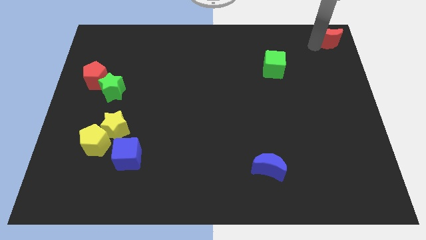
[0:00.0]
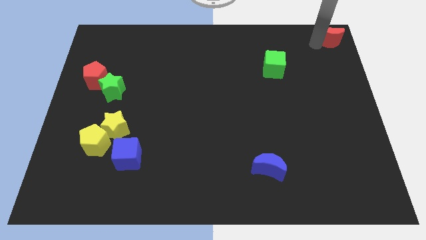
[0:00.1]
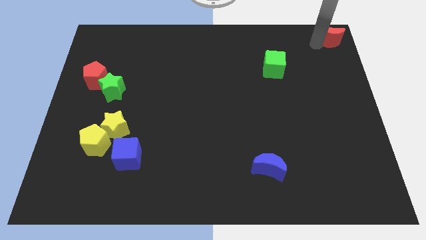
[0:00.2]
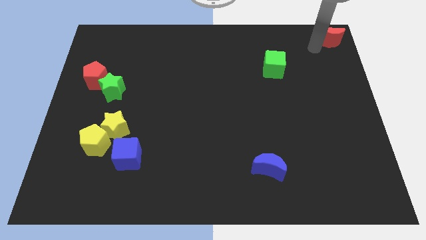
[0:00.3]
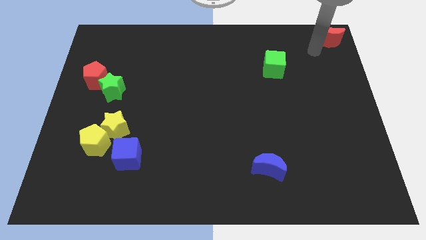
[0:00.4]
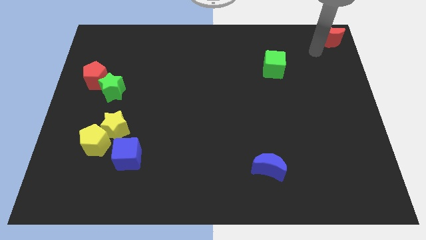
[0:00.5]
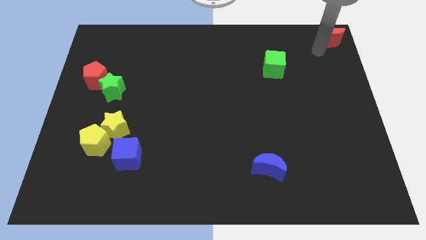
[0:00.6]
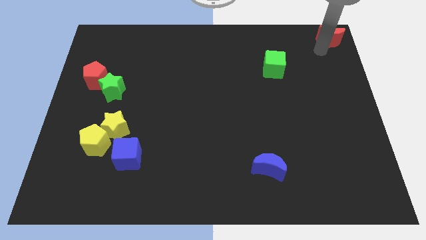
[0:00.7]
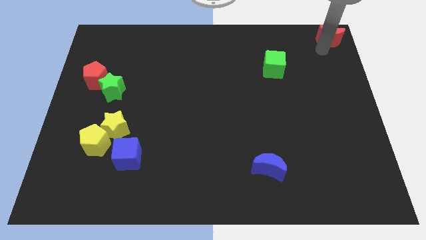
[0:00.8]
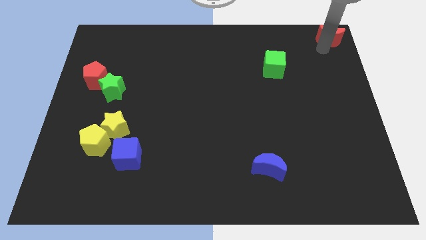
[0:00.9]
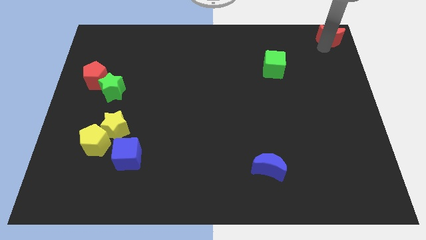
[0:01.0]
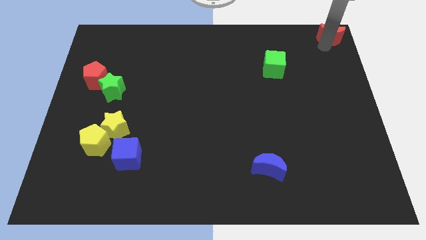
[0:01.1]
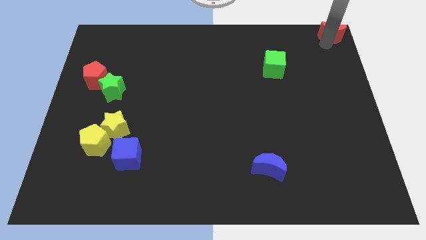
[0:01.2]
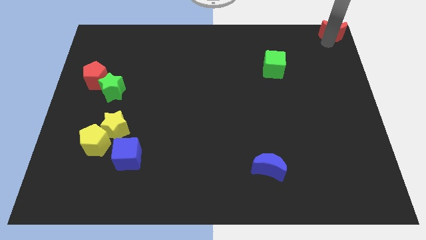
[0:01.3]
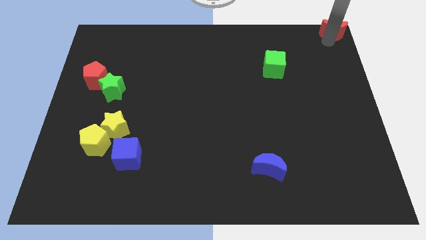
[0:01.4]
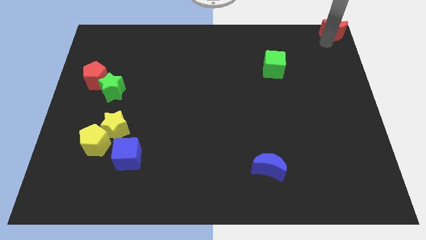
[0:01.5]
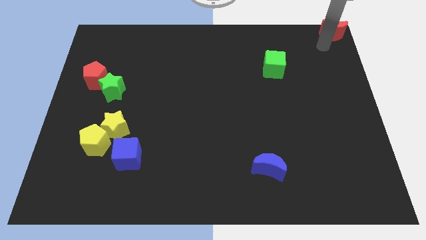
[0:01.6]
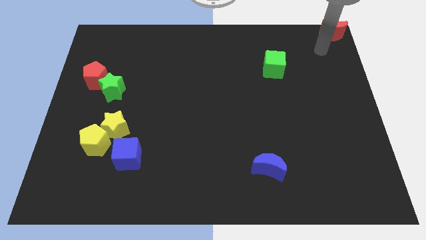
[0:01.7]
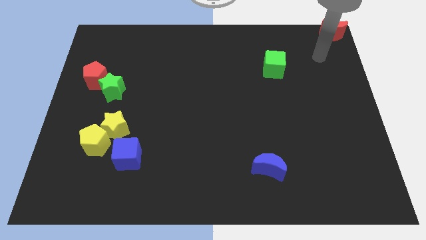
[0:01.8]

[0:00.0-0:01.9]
push the red crescent to the top right of the board

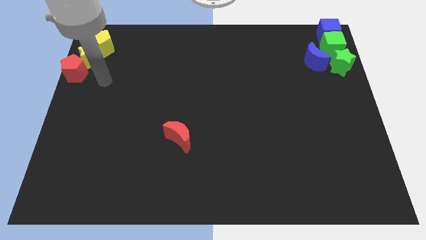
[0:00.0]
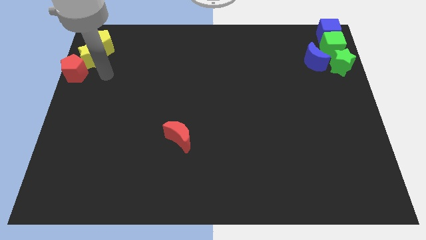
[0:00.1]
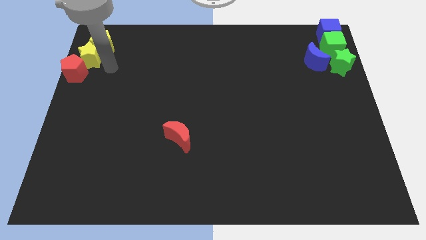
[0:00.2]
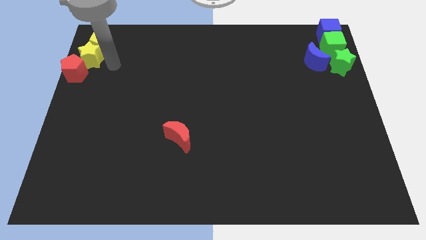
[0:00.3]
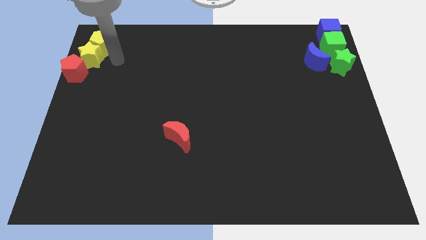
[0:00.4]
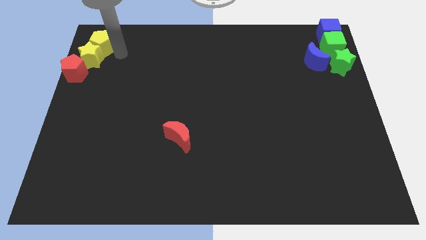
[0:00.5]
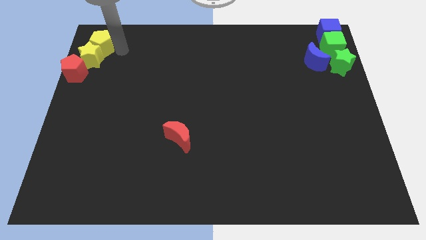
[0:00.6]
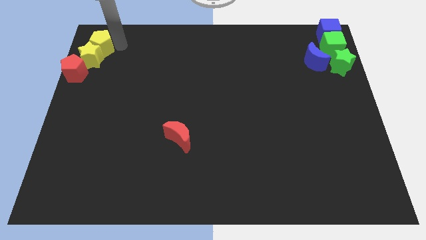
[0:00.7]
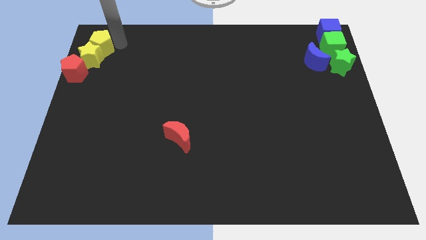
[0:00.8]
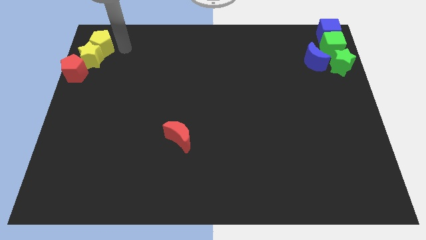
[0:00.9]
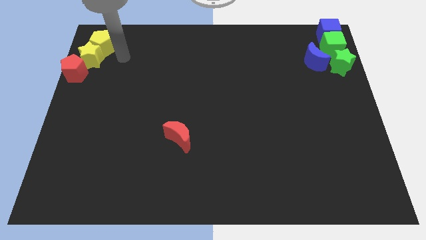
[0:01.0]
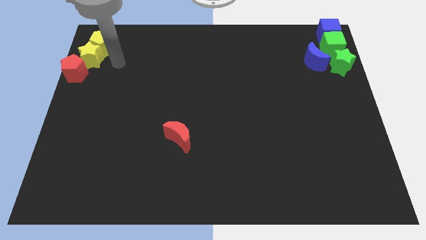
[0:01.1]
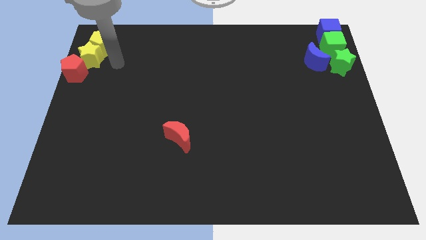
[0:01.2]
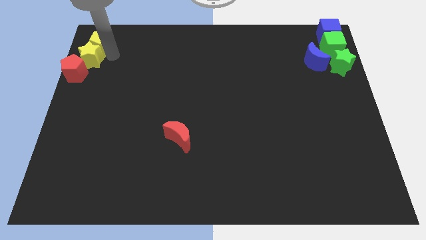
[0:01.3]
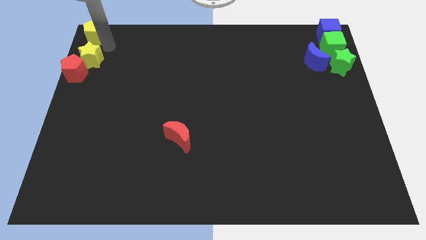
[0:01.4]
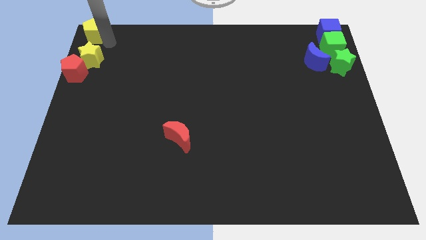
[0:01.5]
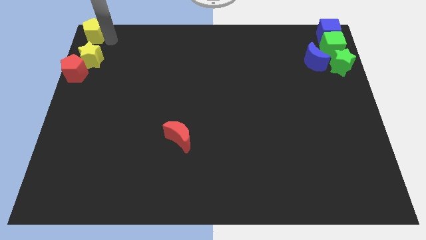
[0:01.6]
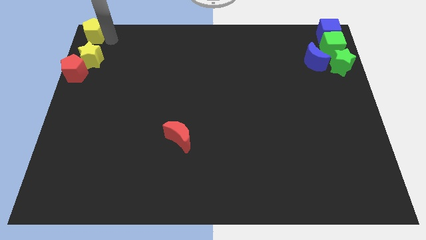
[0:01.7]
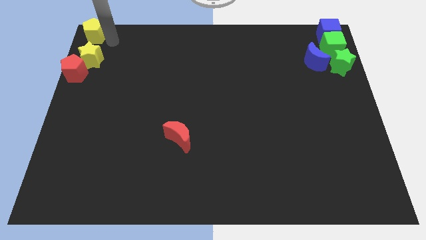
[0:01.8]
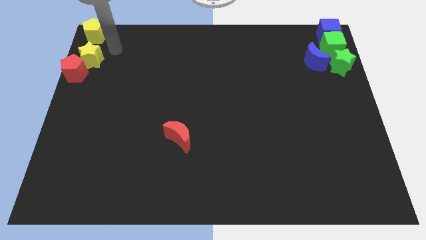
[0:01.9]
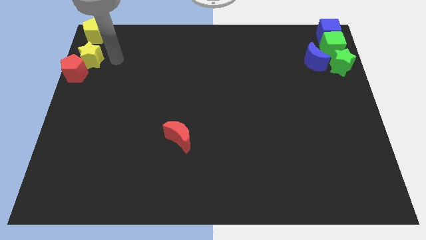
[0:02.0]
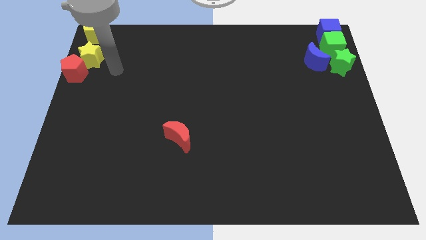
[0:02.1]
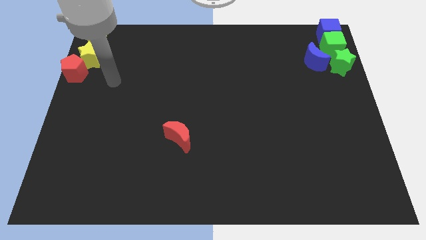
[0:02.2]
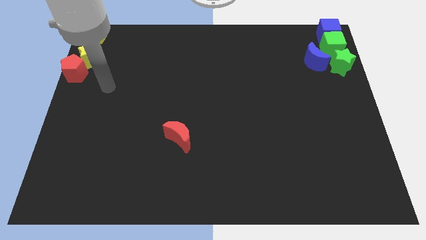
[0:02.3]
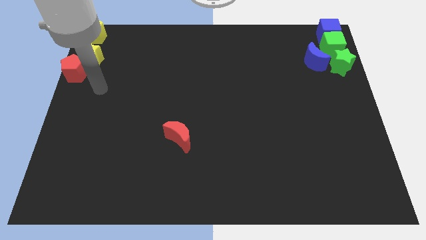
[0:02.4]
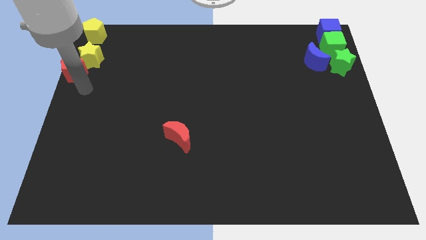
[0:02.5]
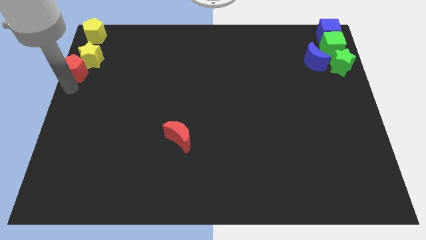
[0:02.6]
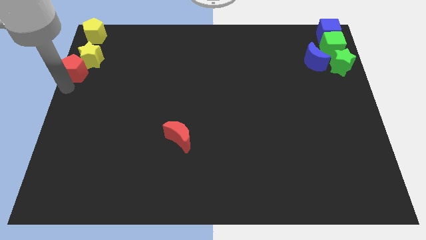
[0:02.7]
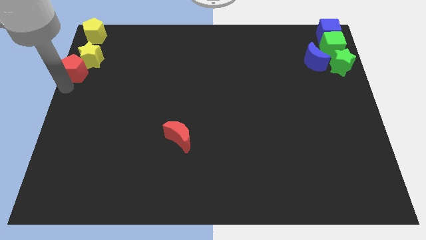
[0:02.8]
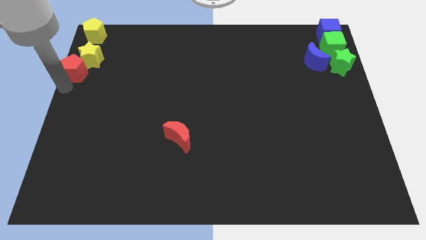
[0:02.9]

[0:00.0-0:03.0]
separate the yellow pentagon from yellow star towards top

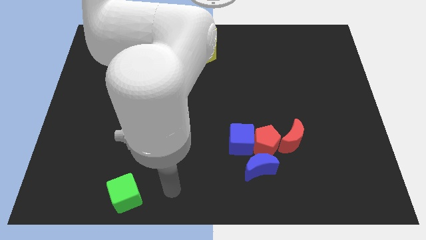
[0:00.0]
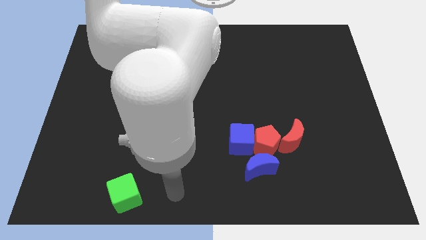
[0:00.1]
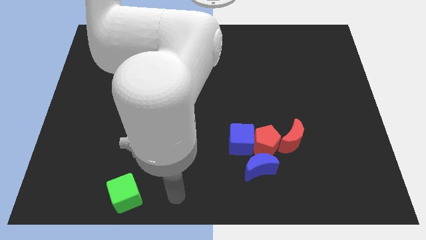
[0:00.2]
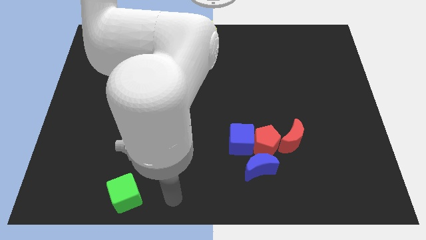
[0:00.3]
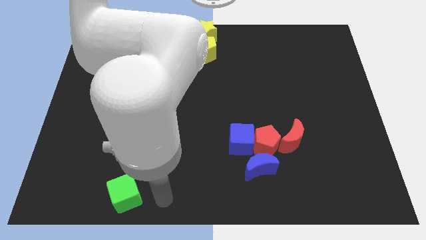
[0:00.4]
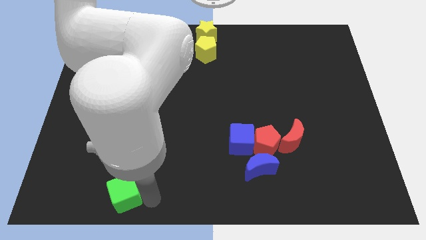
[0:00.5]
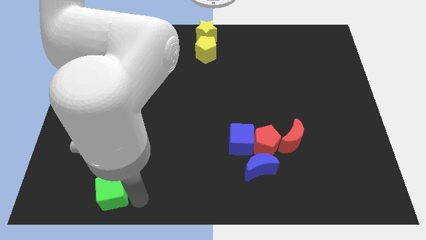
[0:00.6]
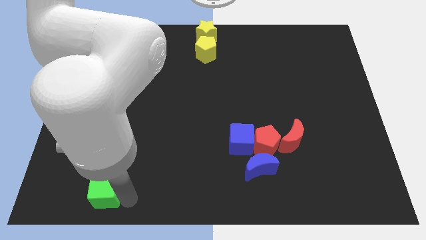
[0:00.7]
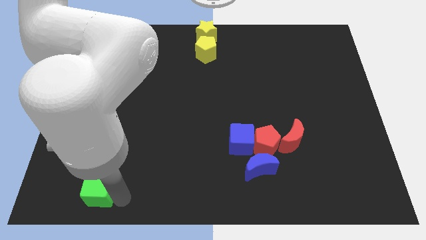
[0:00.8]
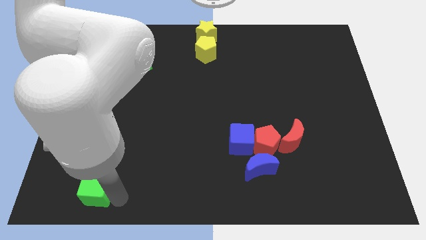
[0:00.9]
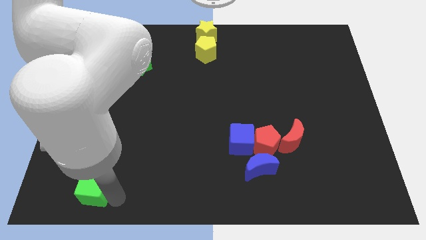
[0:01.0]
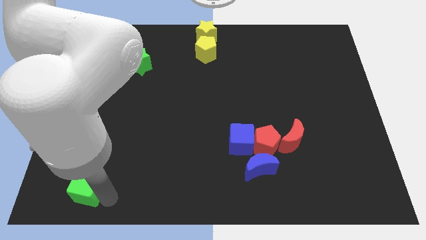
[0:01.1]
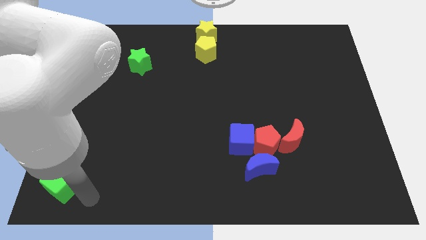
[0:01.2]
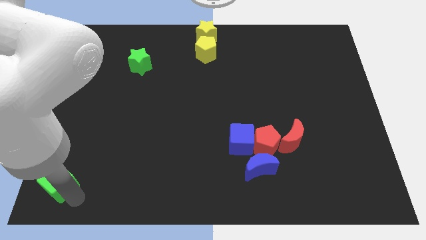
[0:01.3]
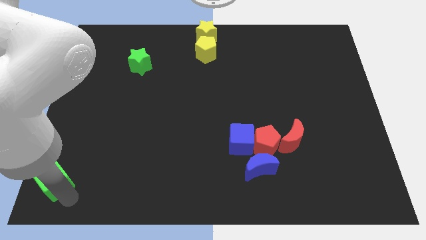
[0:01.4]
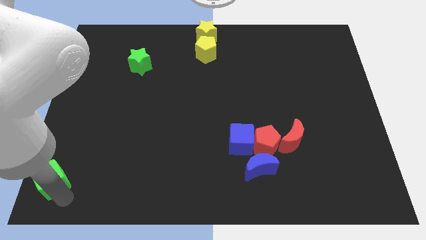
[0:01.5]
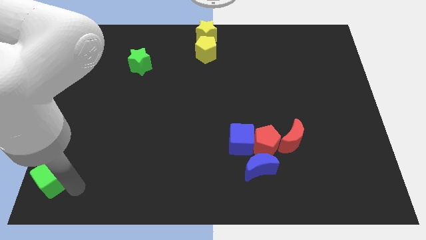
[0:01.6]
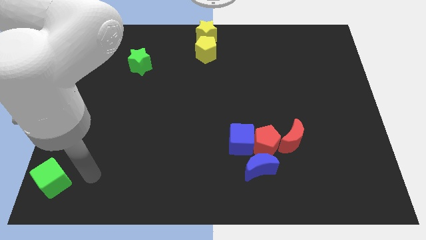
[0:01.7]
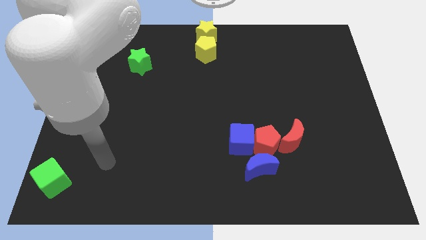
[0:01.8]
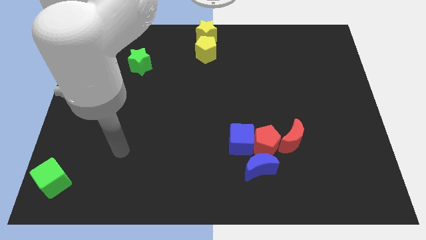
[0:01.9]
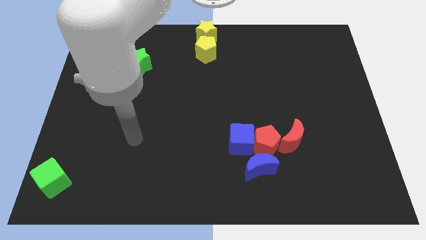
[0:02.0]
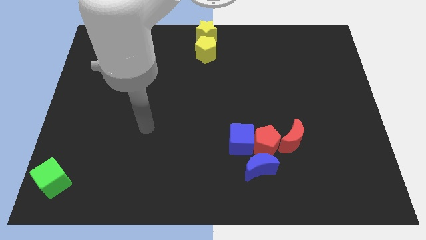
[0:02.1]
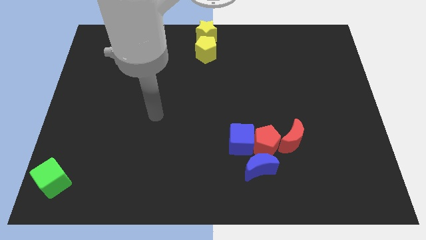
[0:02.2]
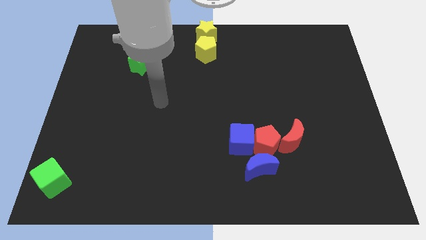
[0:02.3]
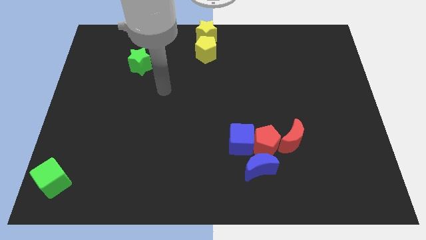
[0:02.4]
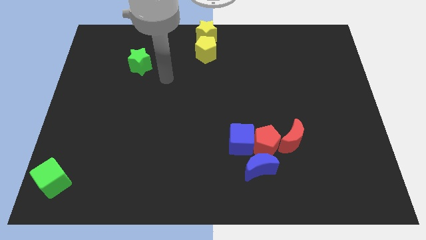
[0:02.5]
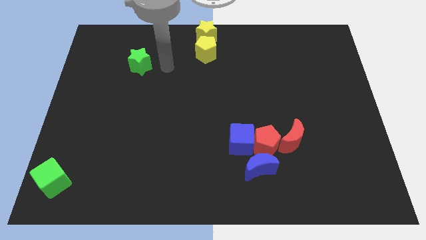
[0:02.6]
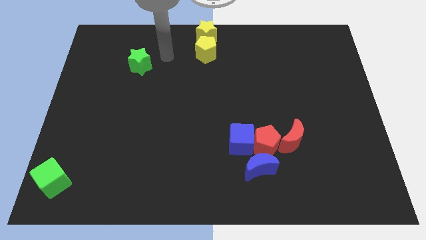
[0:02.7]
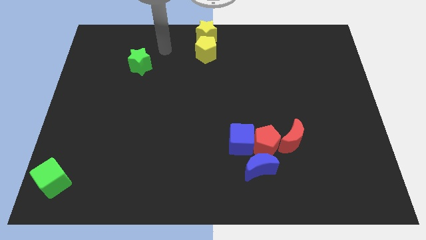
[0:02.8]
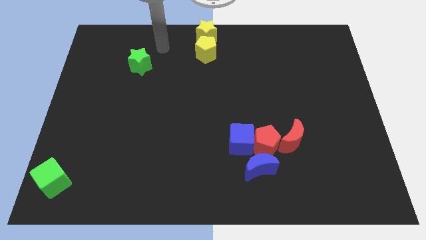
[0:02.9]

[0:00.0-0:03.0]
place the green cube to the left center

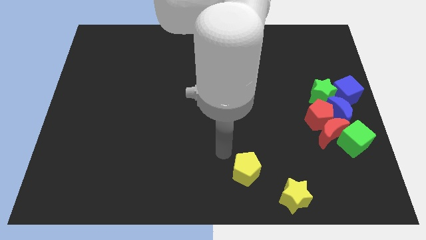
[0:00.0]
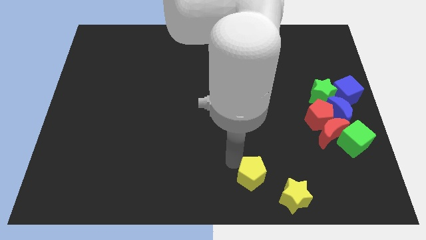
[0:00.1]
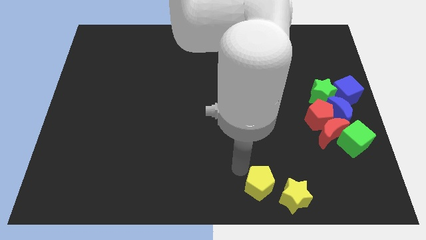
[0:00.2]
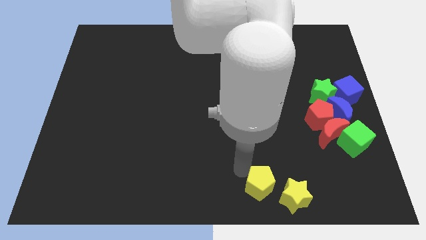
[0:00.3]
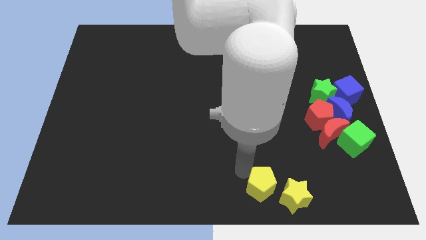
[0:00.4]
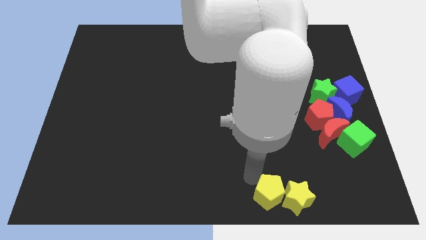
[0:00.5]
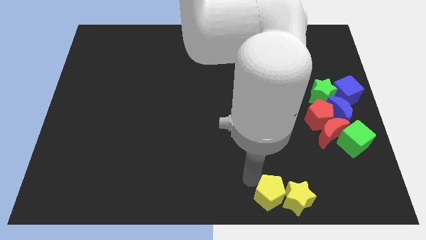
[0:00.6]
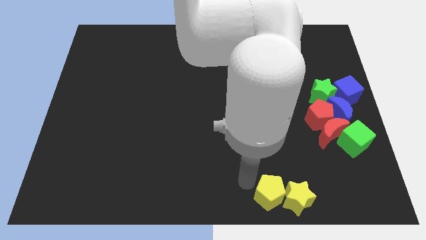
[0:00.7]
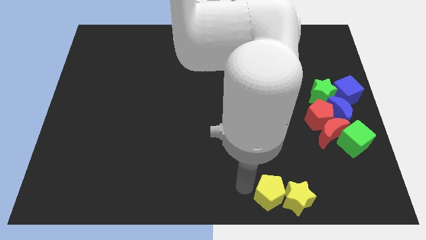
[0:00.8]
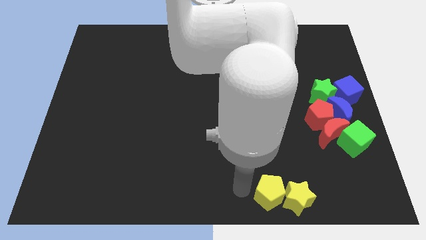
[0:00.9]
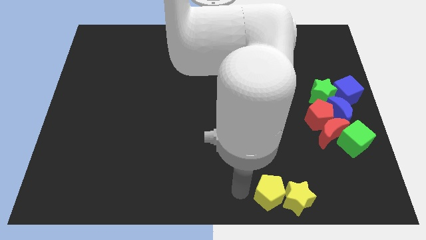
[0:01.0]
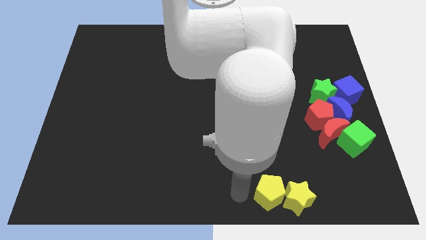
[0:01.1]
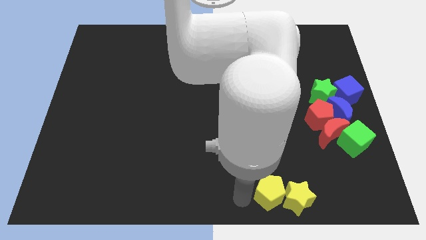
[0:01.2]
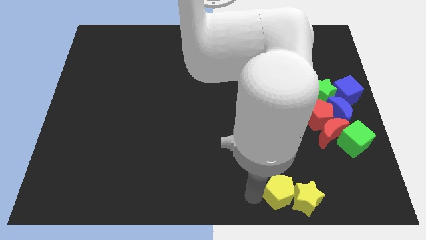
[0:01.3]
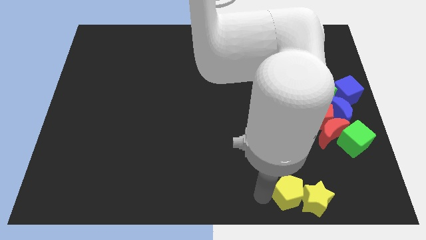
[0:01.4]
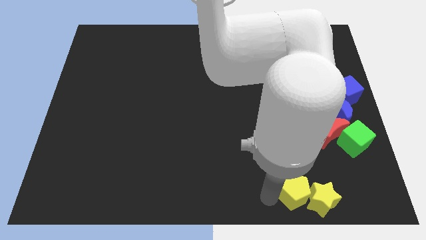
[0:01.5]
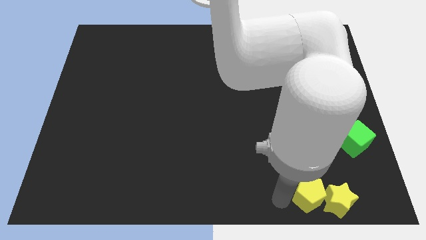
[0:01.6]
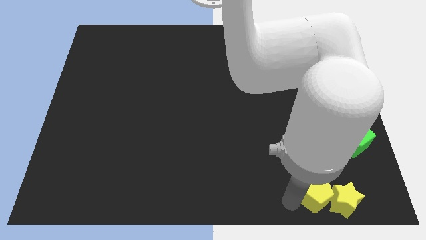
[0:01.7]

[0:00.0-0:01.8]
move the yellow pentagon to the left of the yellow star
